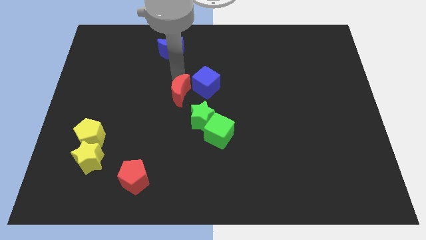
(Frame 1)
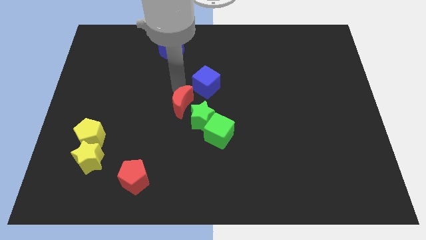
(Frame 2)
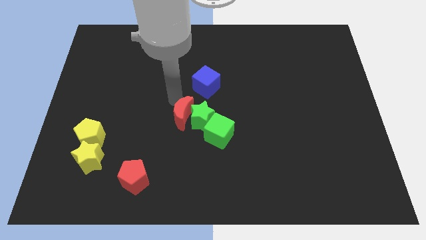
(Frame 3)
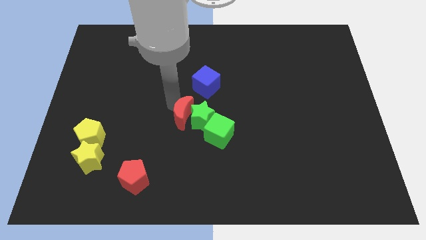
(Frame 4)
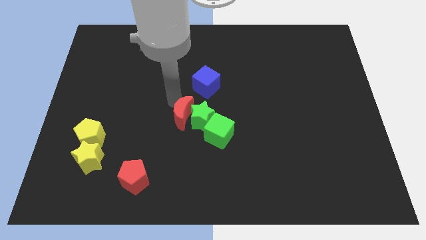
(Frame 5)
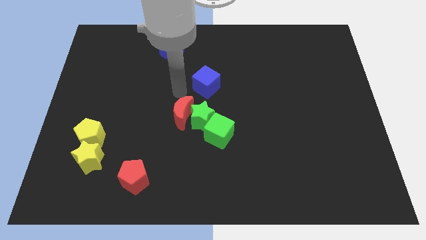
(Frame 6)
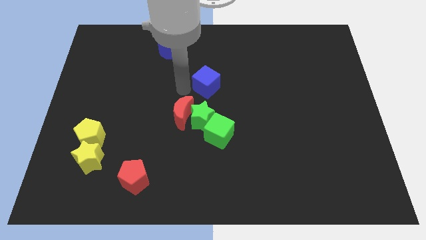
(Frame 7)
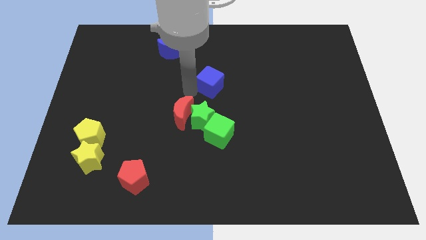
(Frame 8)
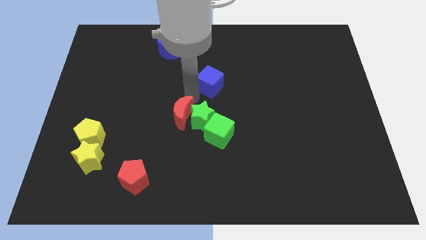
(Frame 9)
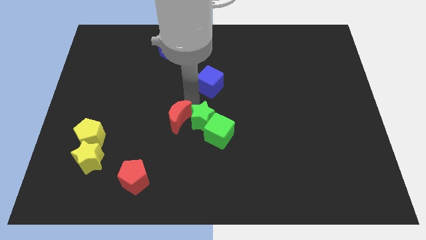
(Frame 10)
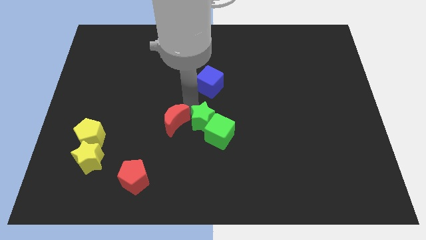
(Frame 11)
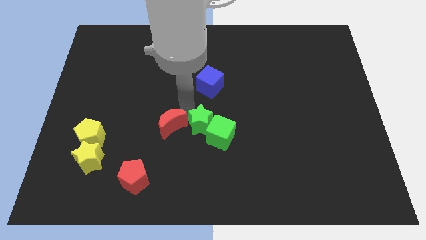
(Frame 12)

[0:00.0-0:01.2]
place the red moon parallel left to the green star

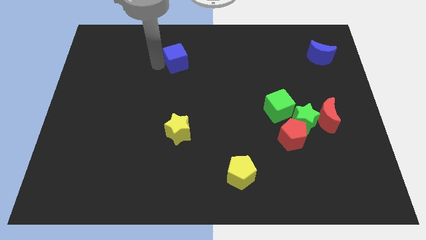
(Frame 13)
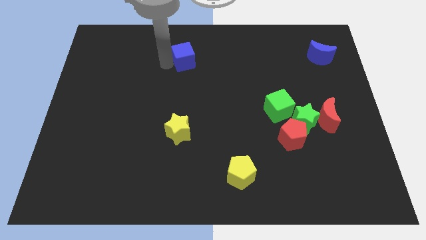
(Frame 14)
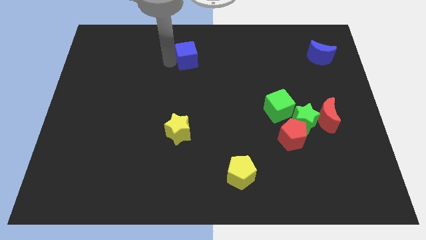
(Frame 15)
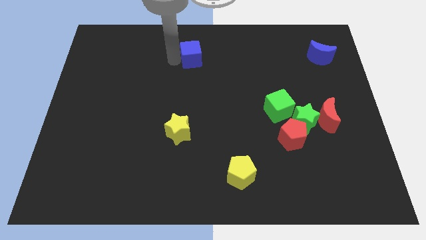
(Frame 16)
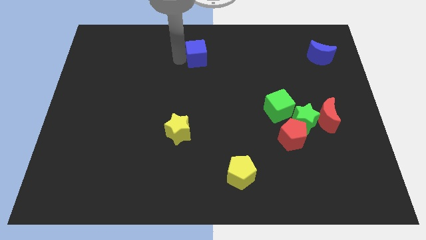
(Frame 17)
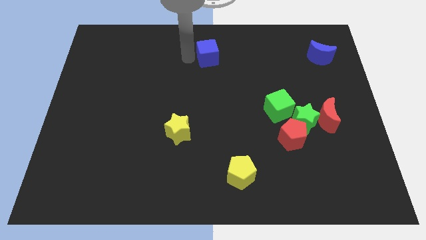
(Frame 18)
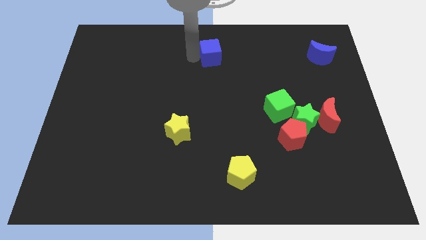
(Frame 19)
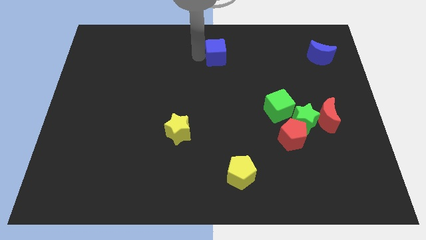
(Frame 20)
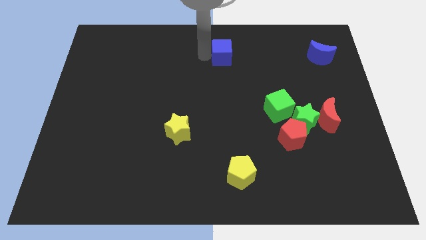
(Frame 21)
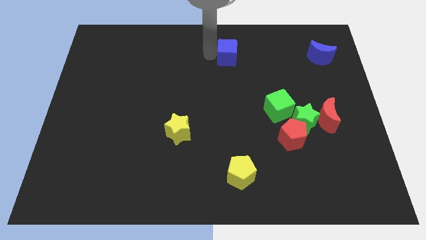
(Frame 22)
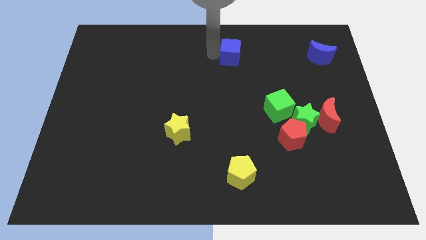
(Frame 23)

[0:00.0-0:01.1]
push blue cube above yellow pentagon

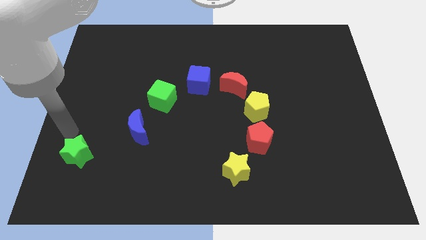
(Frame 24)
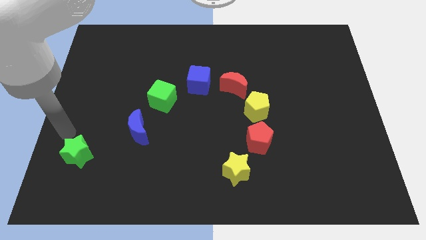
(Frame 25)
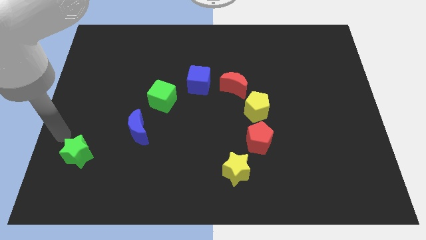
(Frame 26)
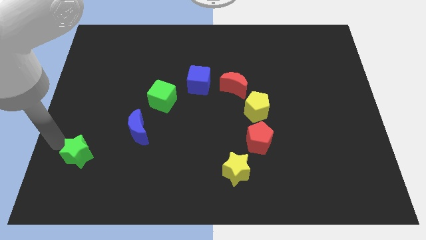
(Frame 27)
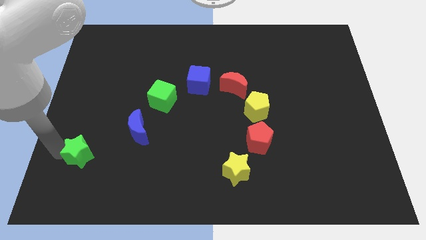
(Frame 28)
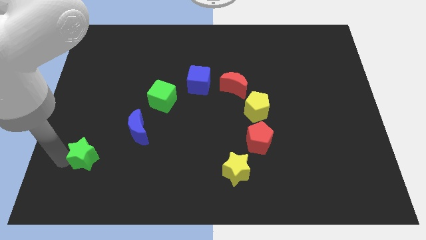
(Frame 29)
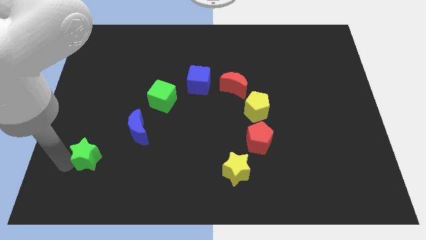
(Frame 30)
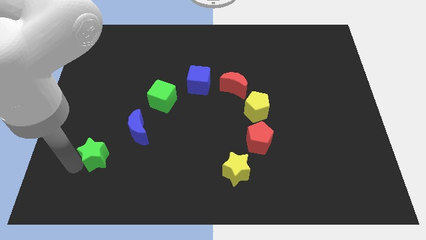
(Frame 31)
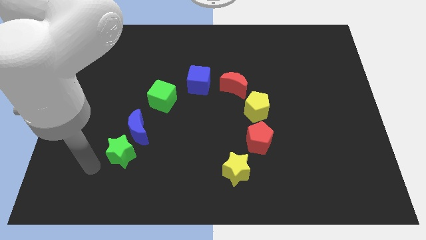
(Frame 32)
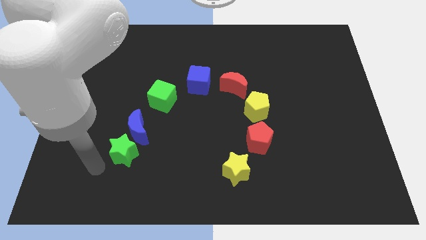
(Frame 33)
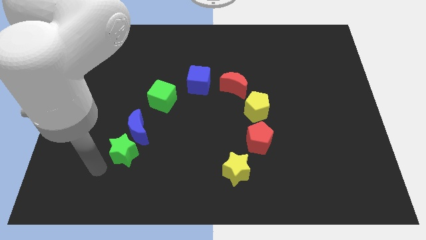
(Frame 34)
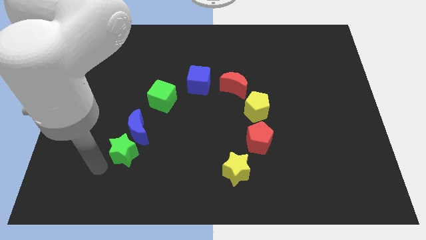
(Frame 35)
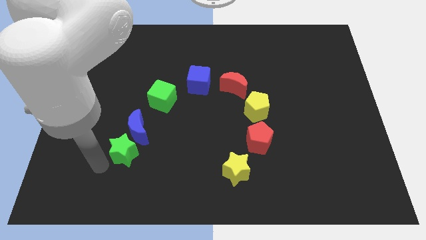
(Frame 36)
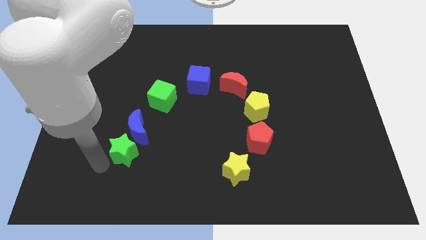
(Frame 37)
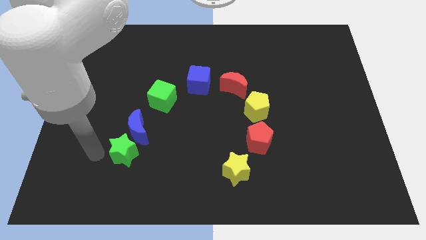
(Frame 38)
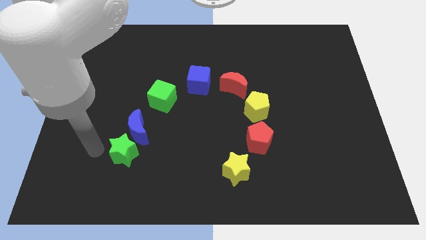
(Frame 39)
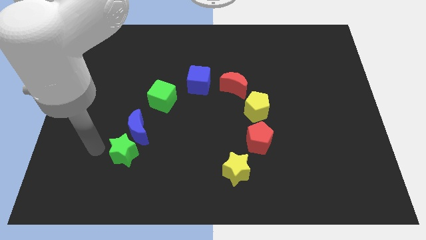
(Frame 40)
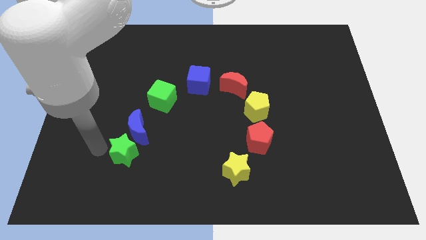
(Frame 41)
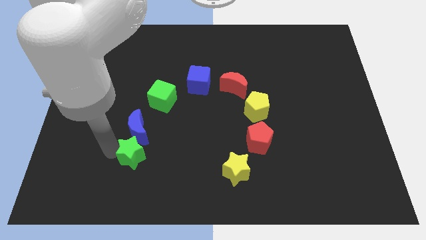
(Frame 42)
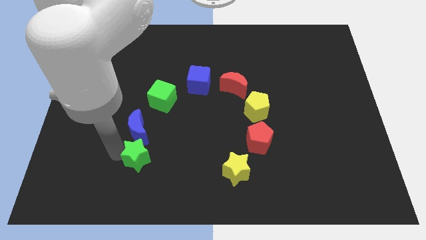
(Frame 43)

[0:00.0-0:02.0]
drag the green star to the bottom side of the blue moon

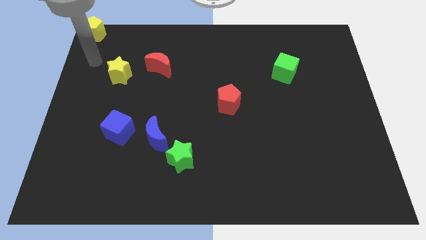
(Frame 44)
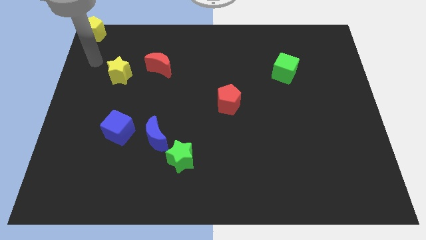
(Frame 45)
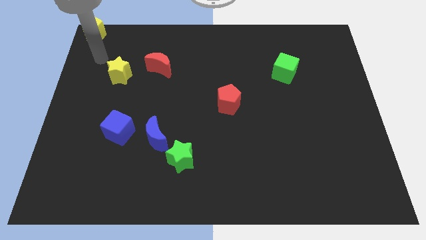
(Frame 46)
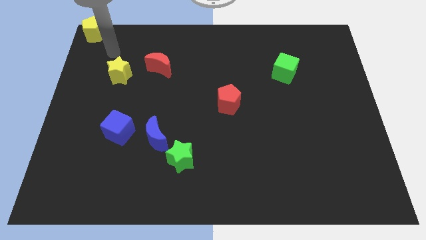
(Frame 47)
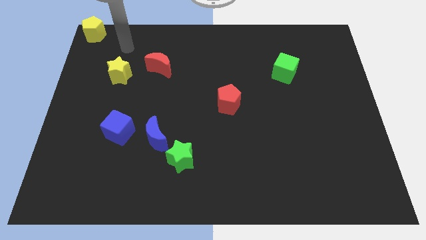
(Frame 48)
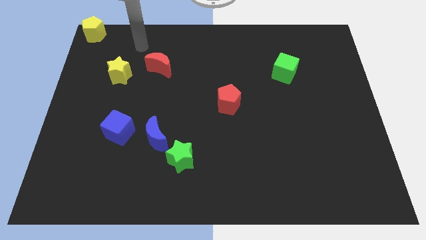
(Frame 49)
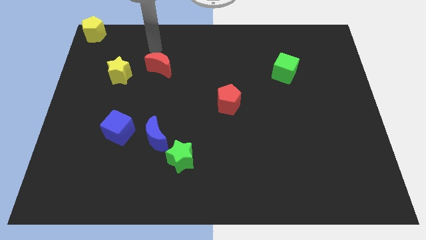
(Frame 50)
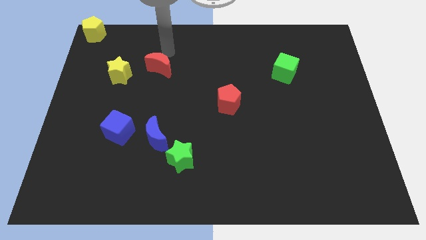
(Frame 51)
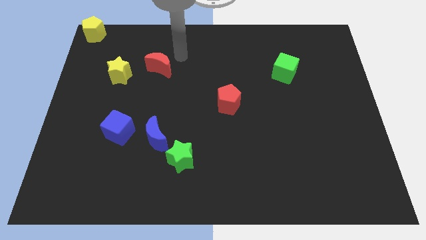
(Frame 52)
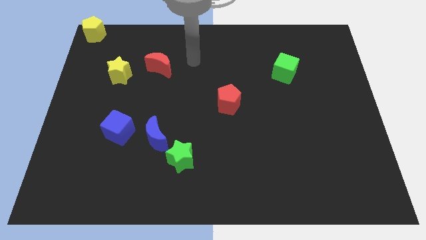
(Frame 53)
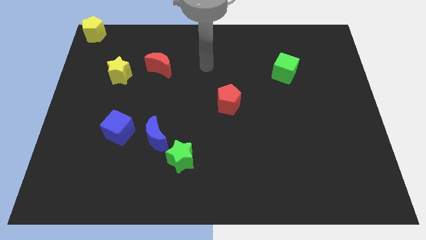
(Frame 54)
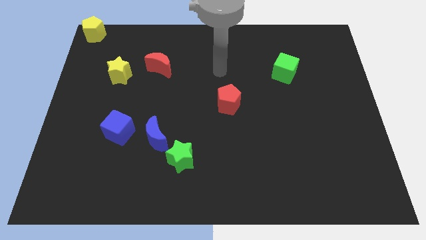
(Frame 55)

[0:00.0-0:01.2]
move your arm towards the red pentagon

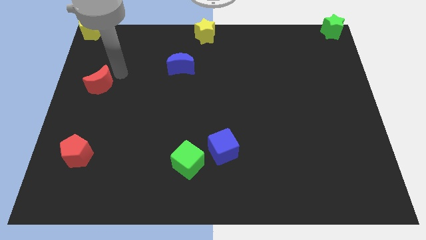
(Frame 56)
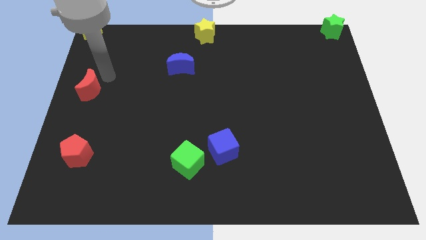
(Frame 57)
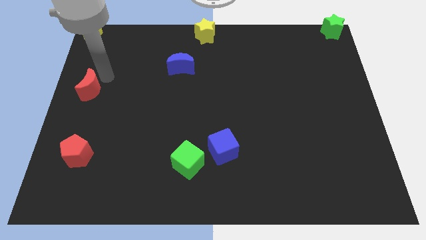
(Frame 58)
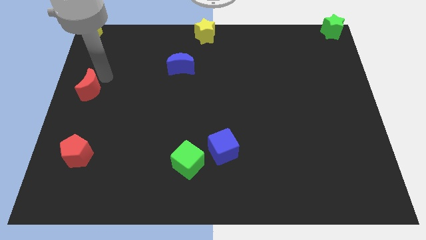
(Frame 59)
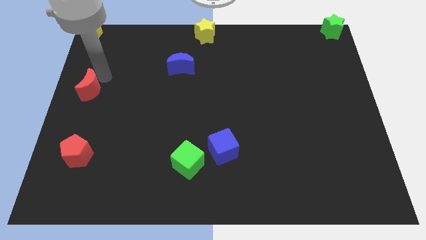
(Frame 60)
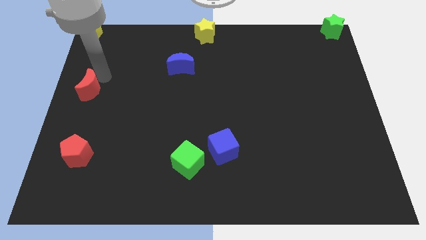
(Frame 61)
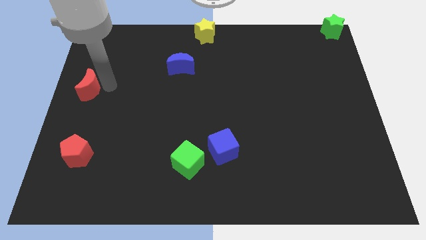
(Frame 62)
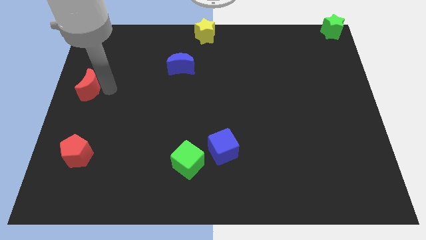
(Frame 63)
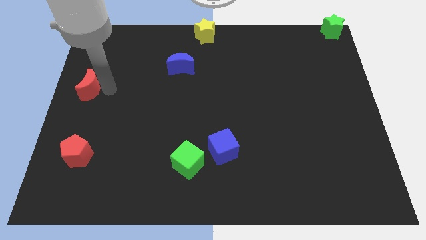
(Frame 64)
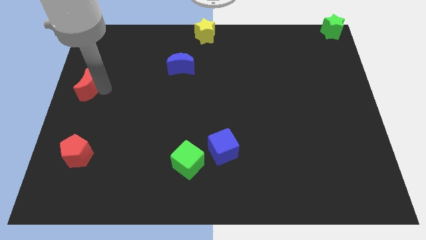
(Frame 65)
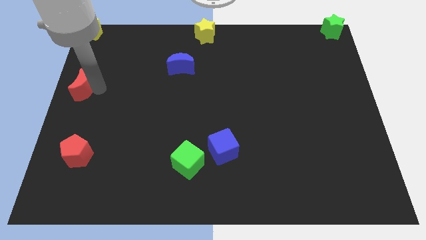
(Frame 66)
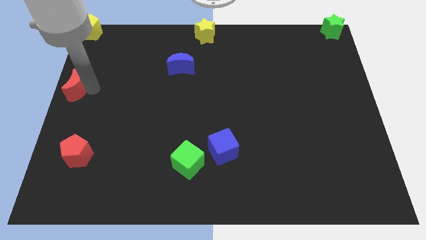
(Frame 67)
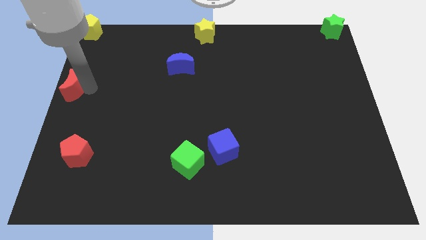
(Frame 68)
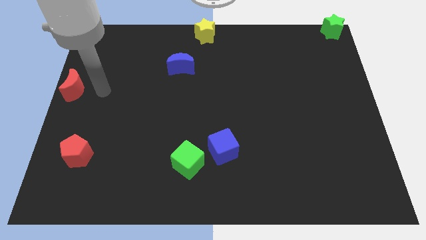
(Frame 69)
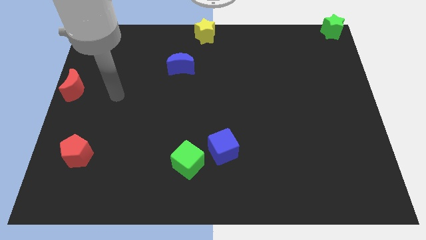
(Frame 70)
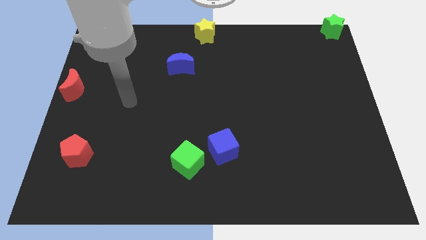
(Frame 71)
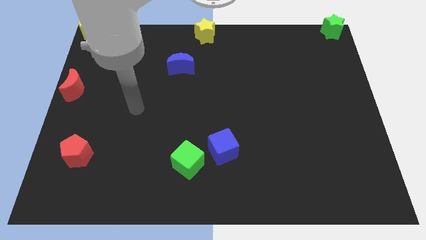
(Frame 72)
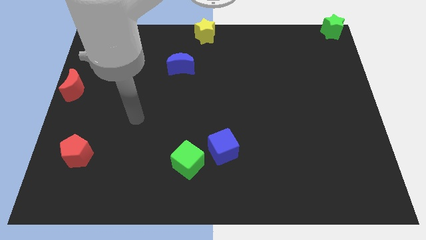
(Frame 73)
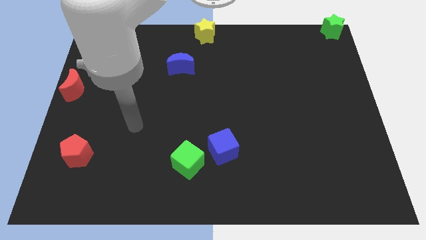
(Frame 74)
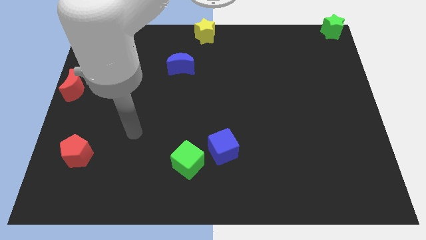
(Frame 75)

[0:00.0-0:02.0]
push the red crescent to the center left corner of the board

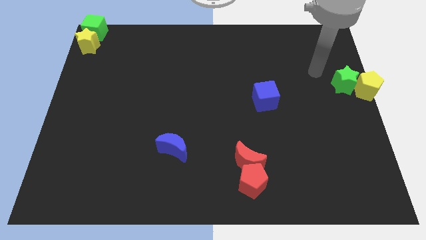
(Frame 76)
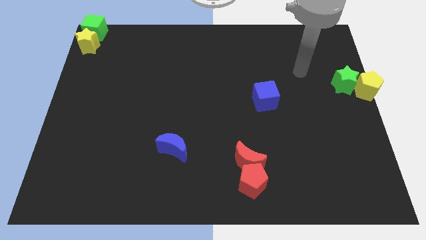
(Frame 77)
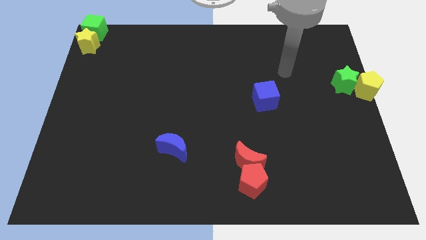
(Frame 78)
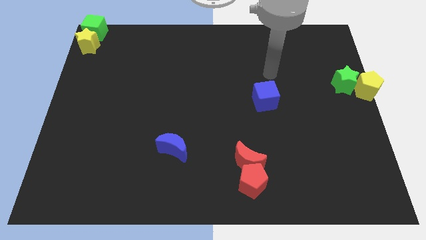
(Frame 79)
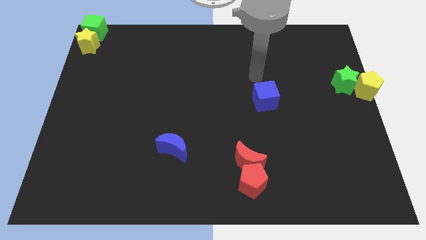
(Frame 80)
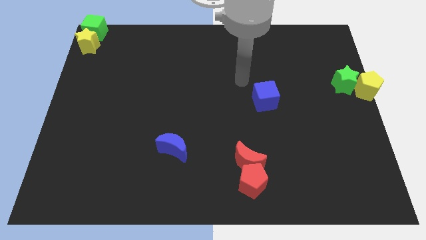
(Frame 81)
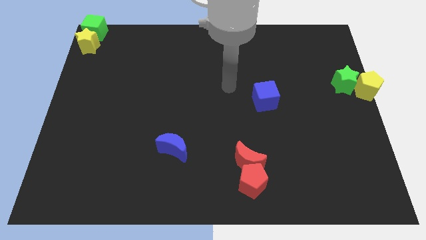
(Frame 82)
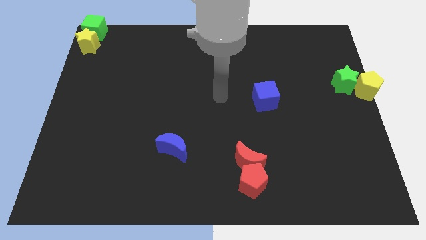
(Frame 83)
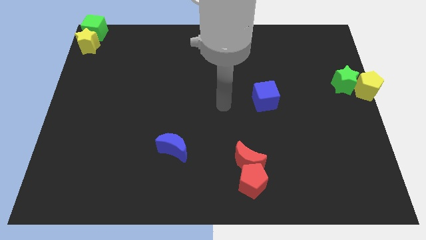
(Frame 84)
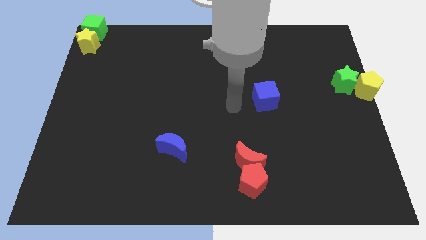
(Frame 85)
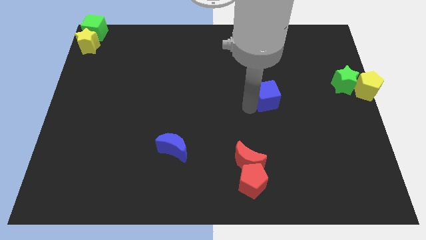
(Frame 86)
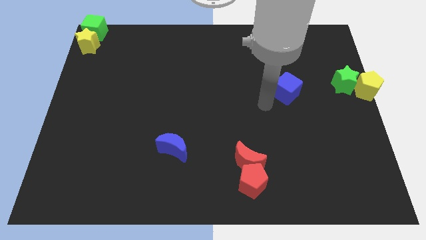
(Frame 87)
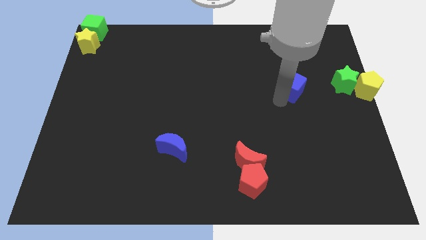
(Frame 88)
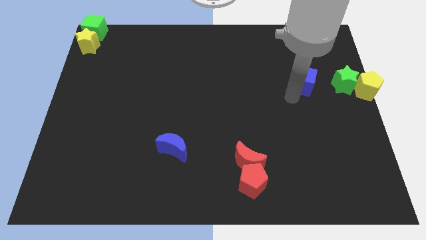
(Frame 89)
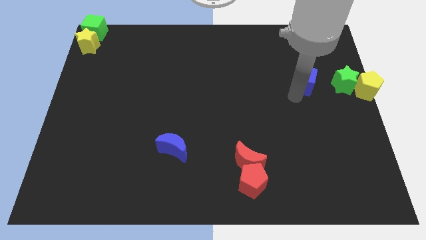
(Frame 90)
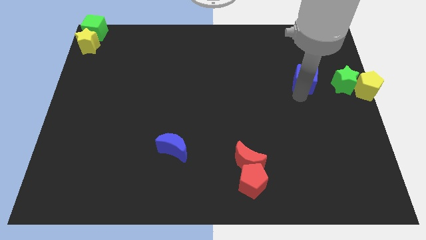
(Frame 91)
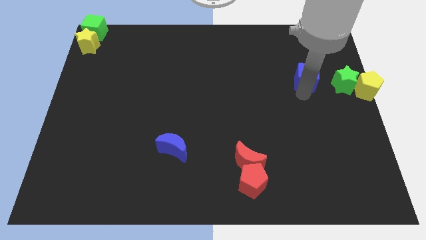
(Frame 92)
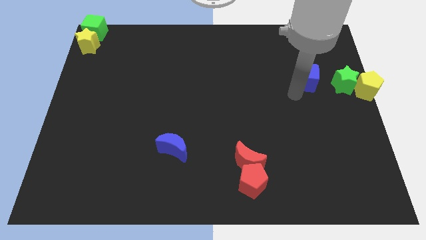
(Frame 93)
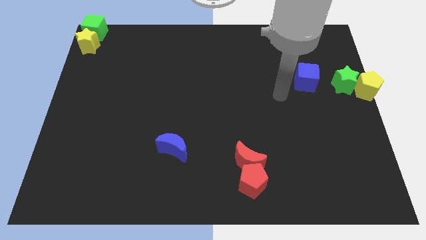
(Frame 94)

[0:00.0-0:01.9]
move the blue cube to the left of green star
